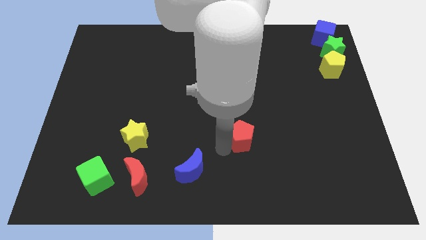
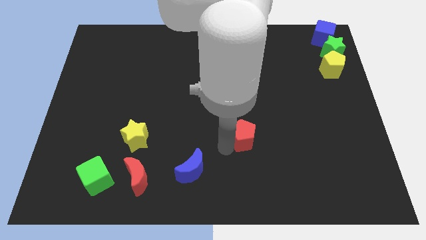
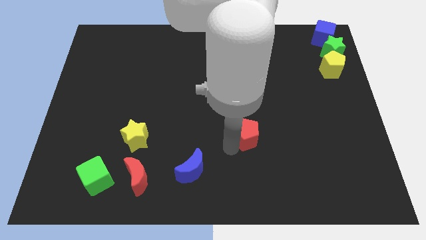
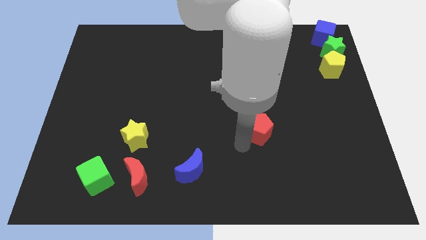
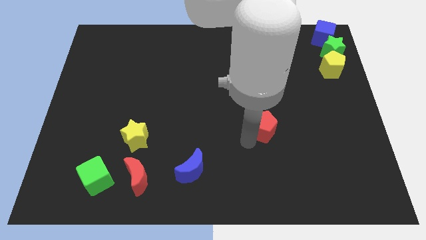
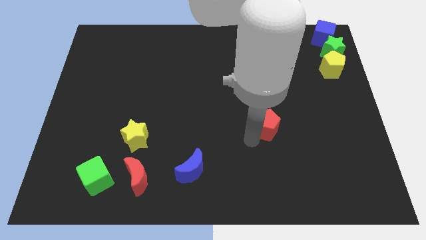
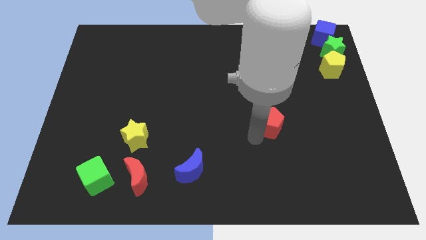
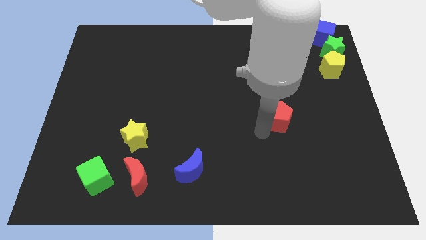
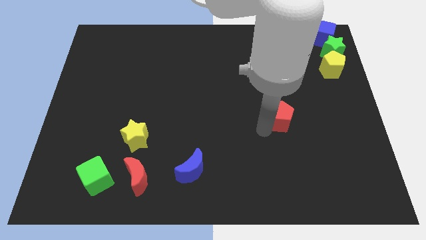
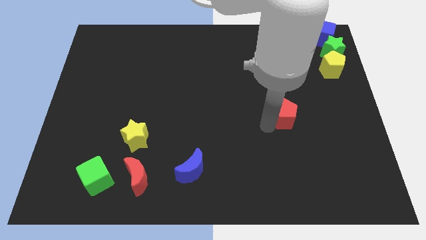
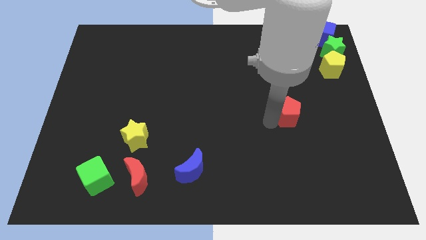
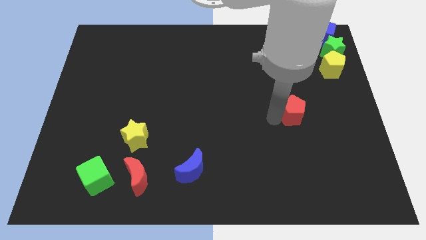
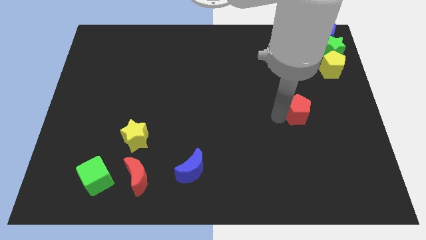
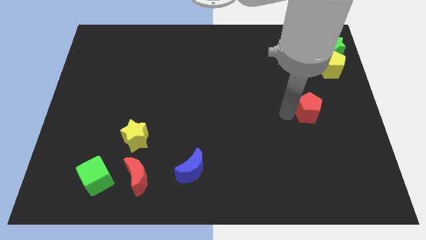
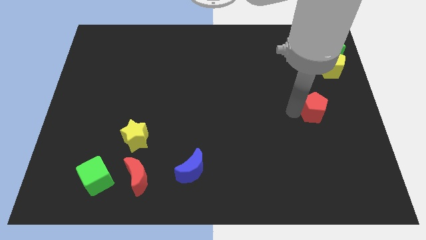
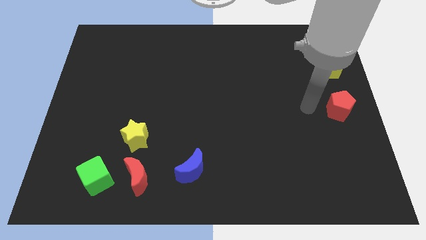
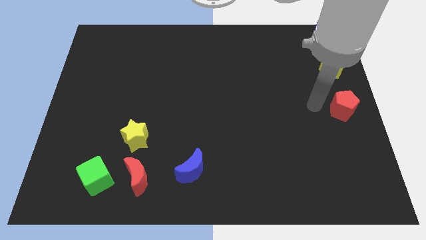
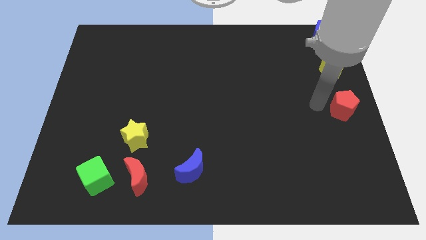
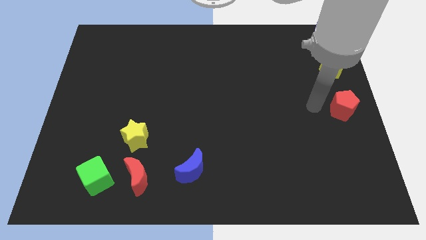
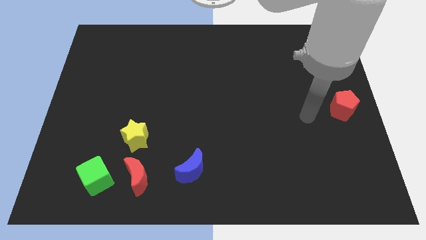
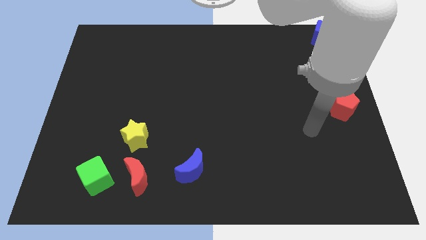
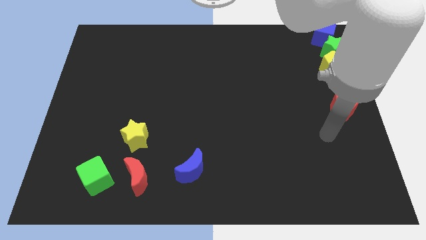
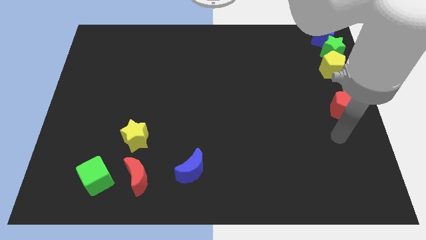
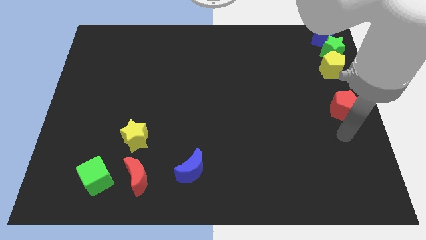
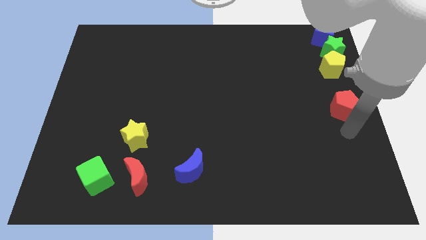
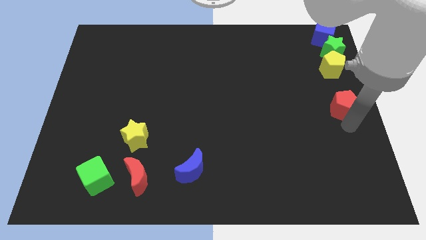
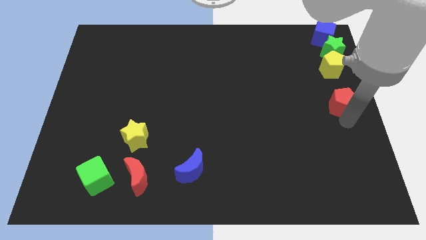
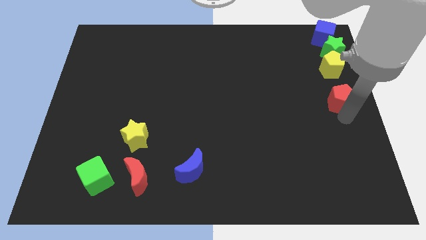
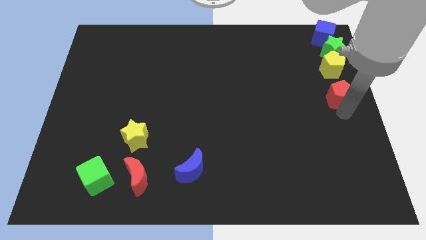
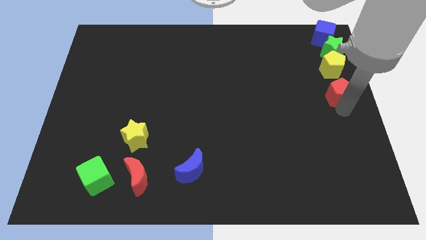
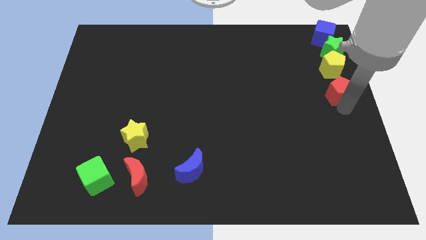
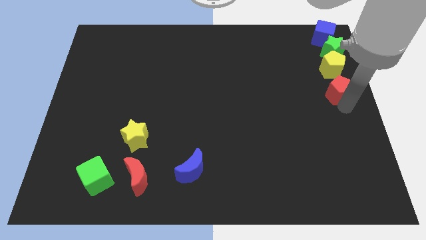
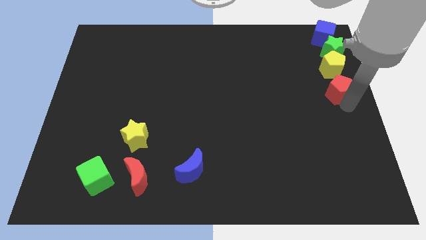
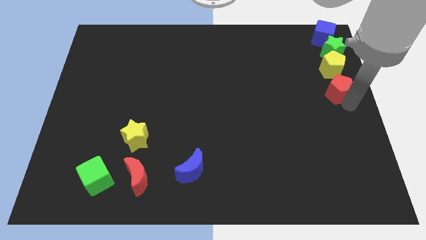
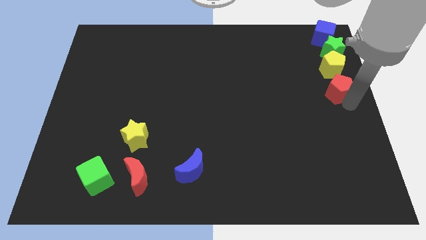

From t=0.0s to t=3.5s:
push the red pentagon to the bottom of the yellow pentagon

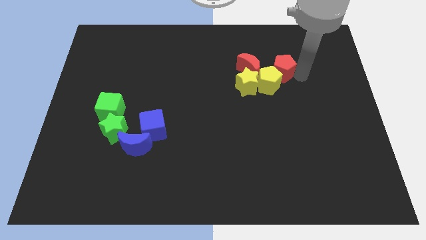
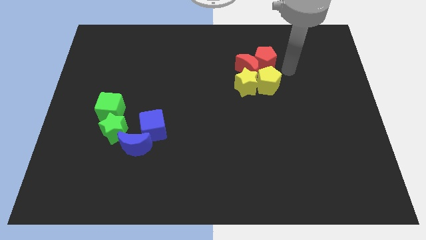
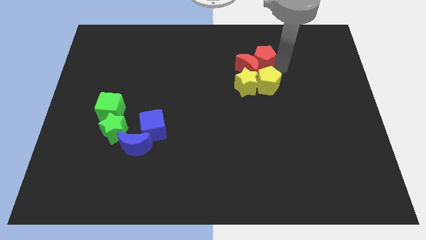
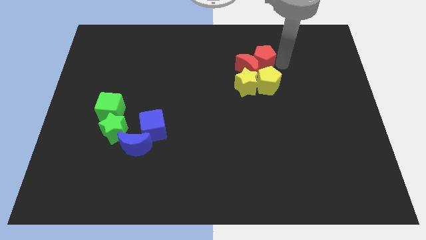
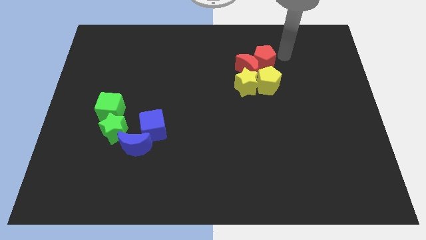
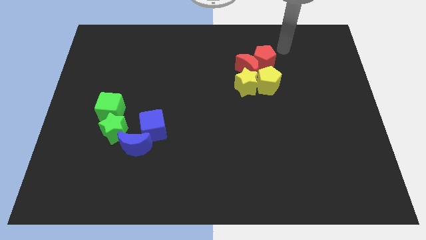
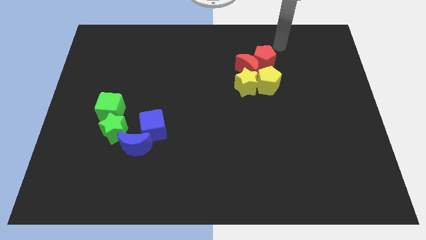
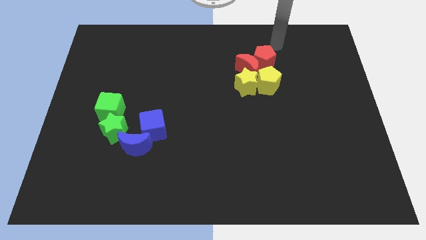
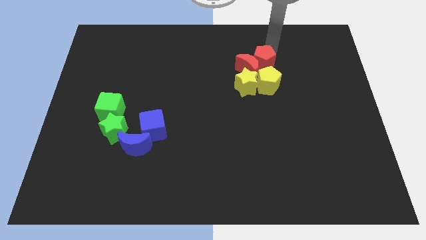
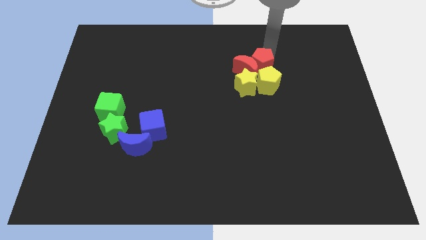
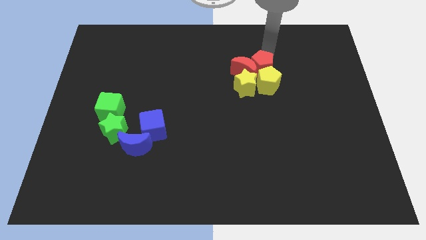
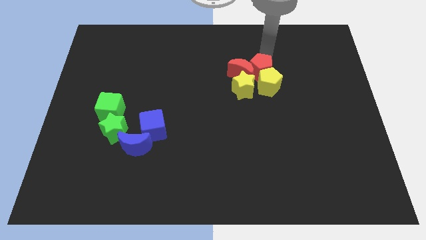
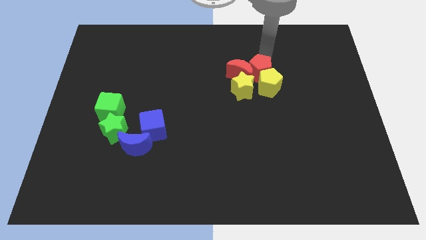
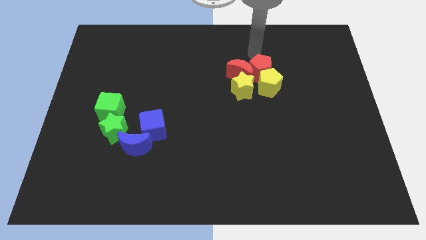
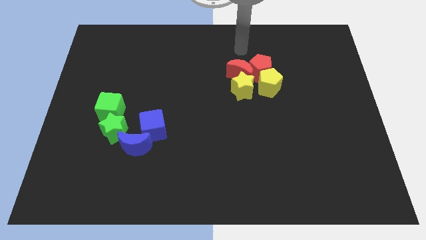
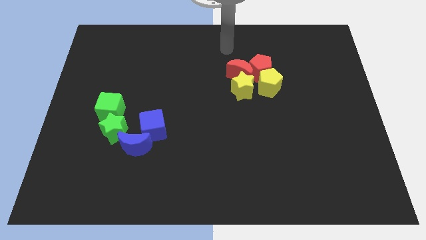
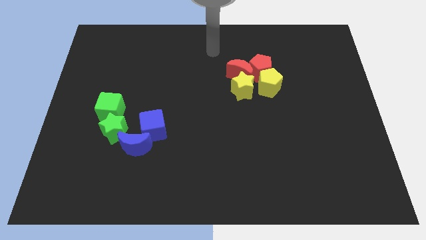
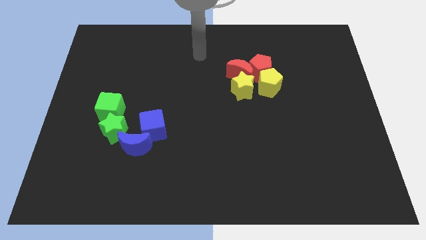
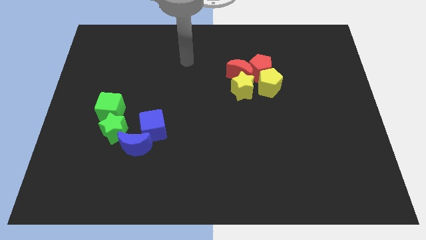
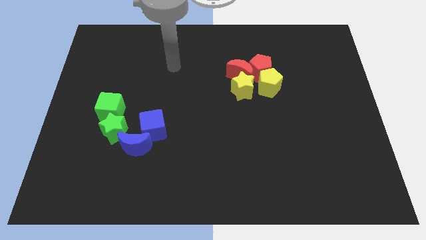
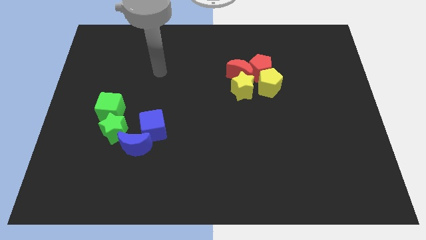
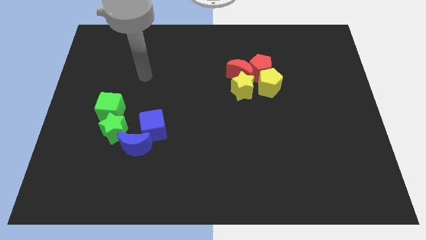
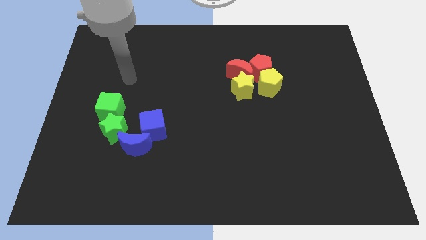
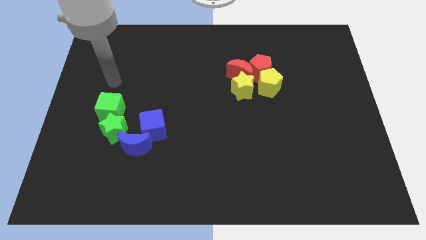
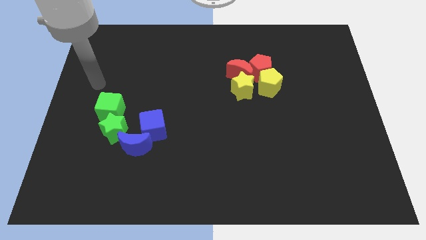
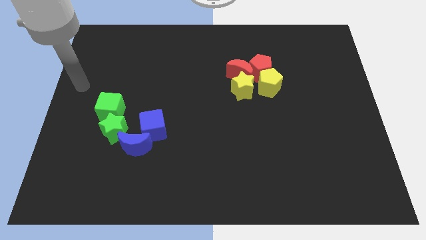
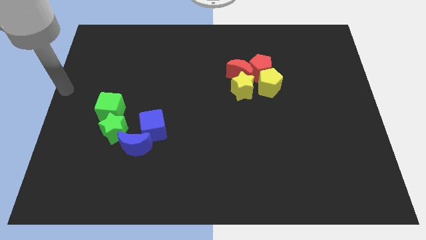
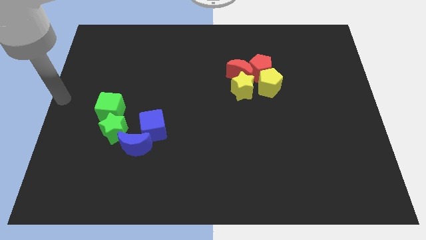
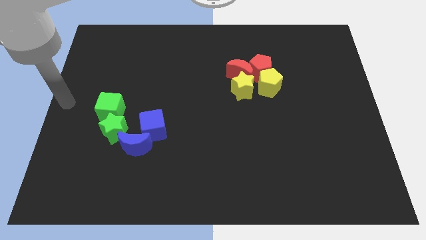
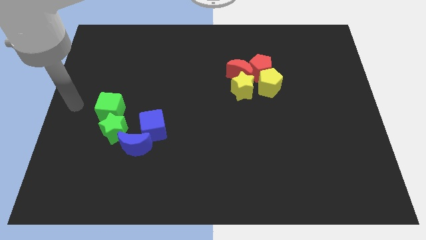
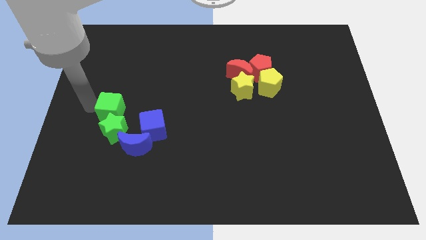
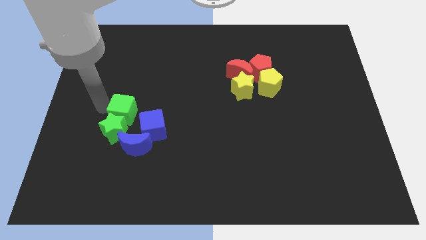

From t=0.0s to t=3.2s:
move your arm away from the top right

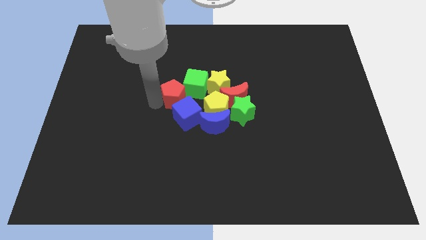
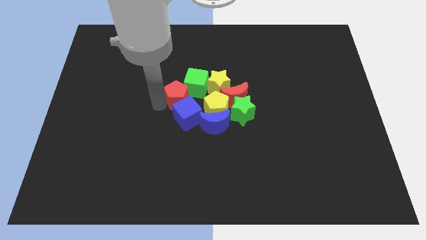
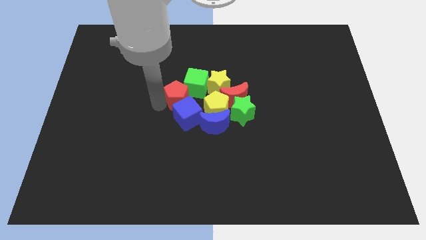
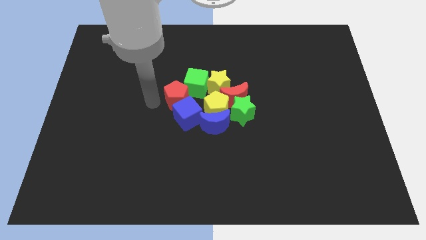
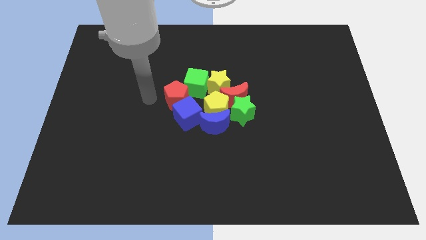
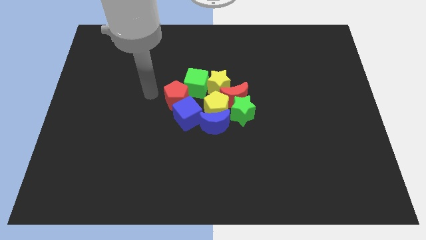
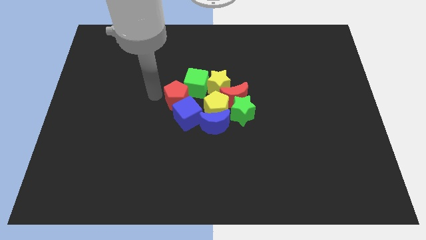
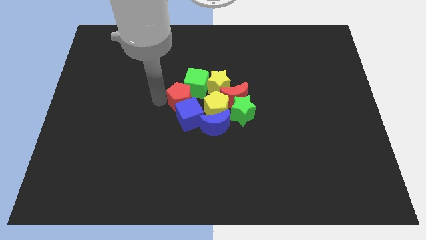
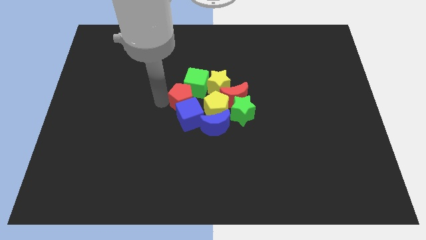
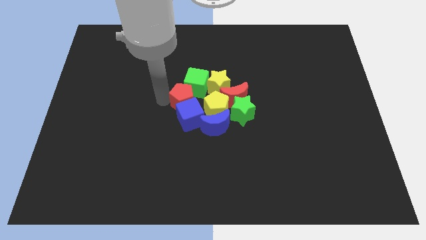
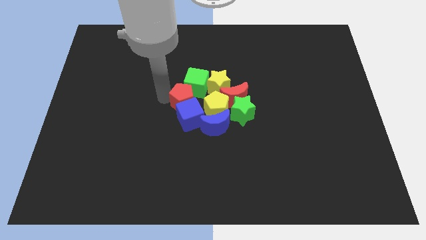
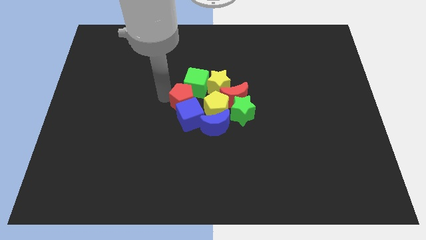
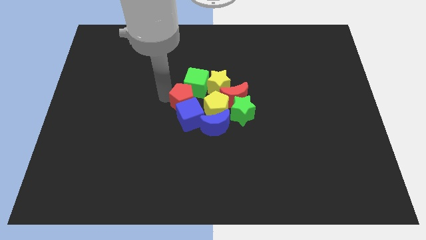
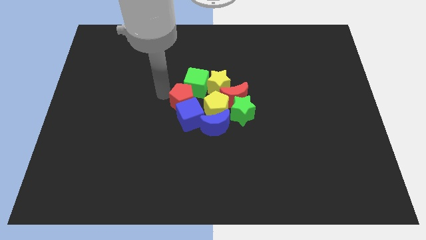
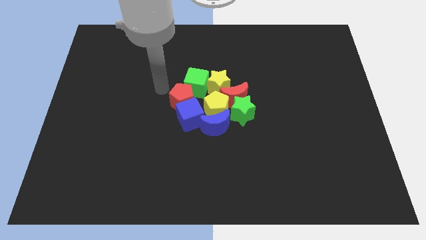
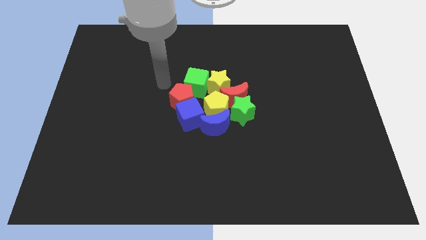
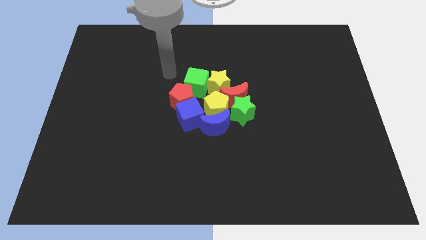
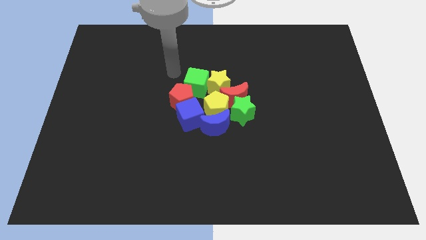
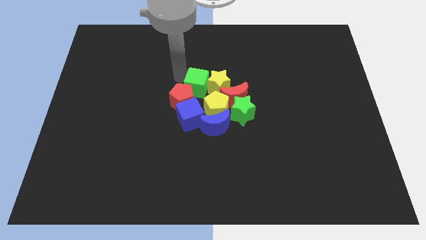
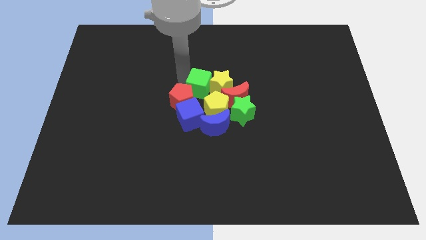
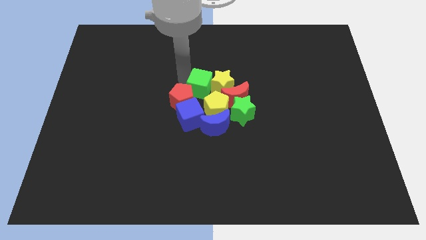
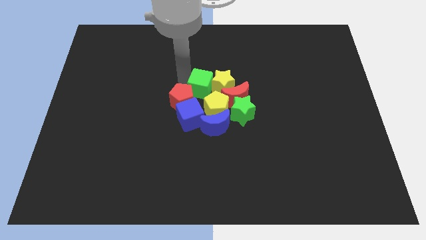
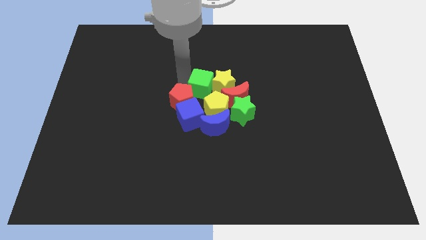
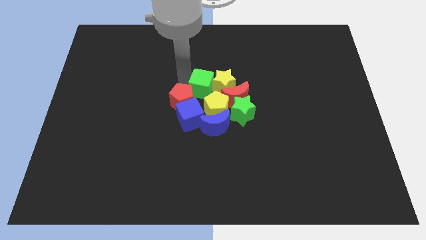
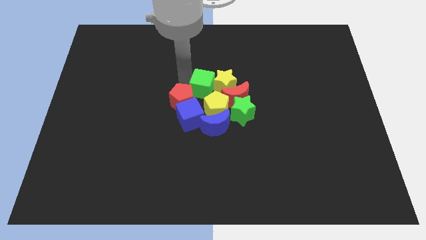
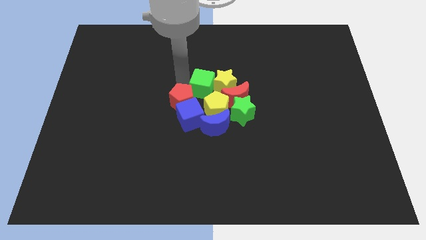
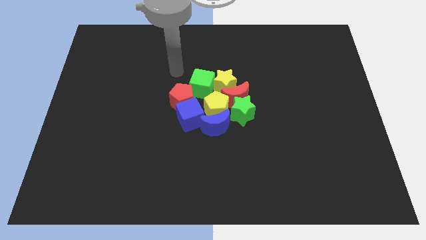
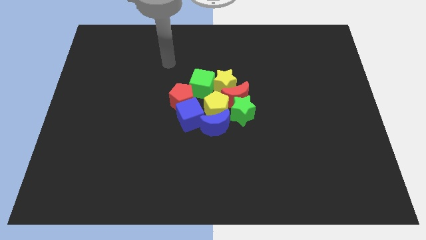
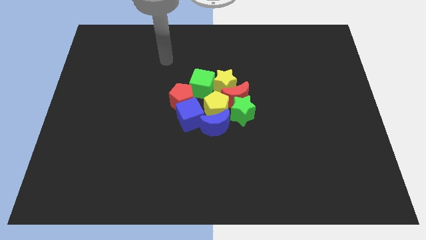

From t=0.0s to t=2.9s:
push group of blocks to the centre of board
